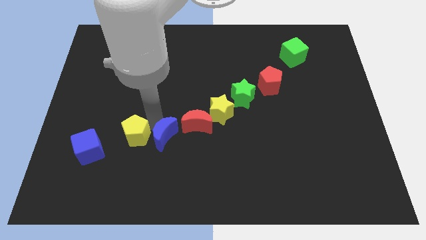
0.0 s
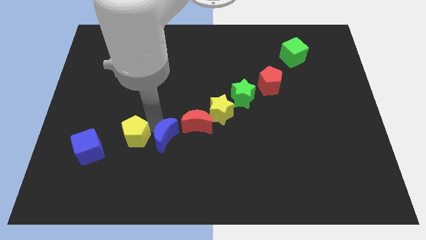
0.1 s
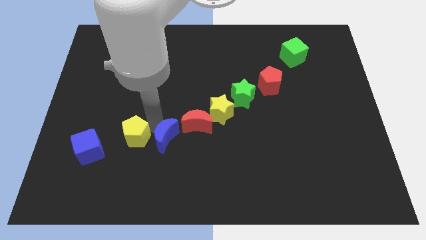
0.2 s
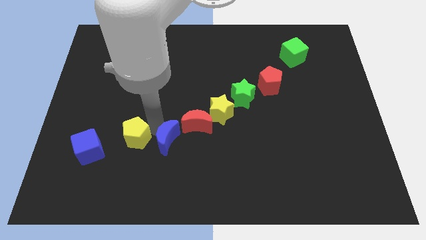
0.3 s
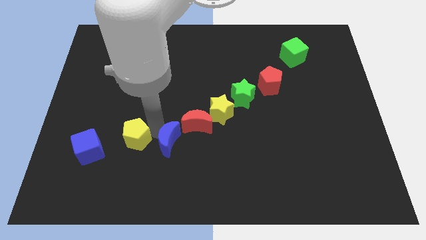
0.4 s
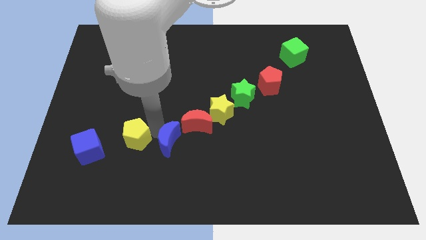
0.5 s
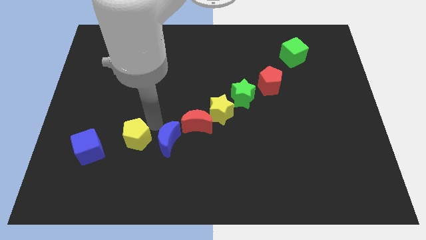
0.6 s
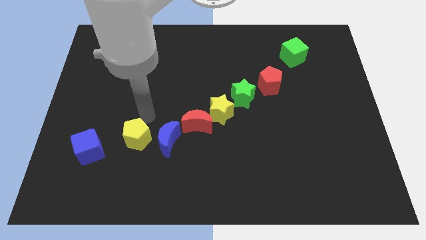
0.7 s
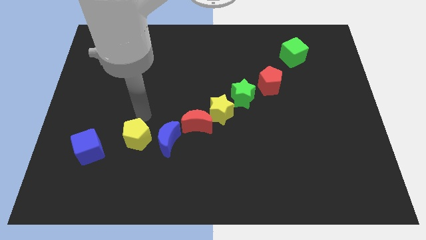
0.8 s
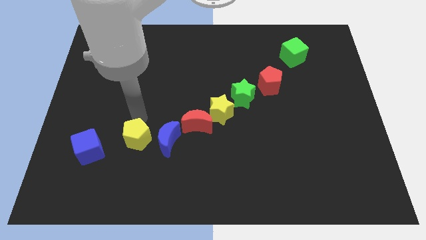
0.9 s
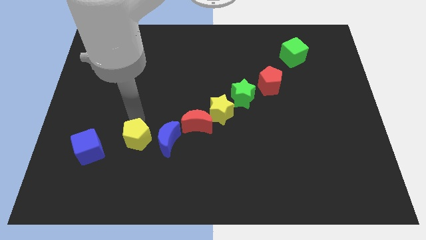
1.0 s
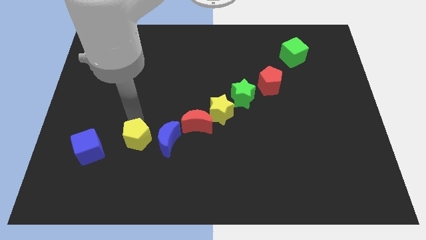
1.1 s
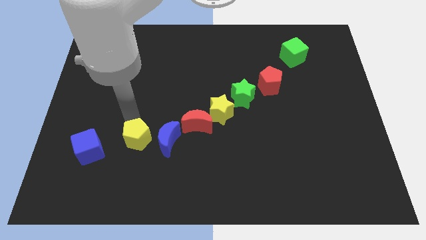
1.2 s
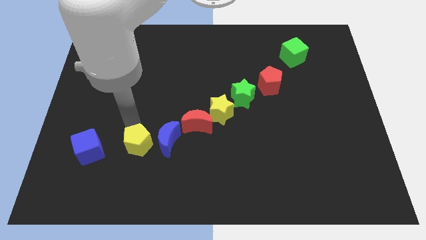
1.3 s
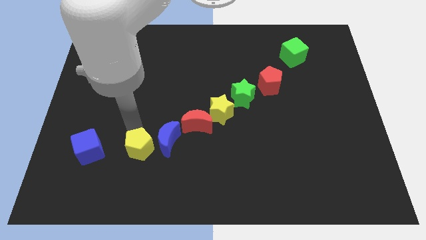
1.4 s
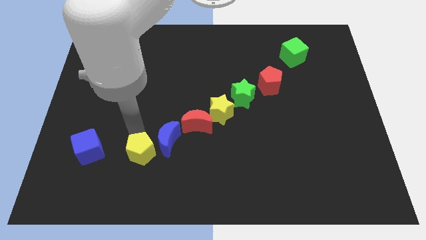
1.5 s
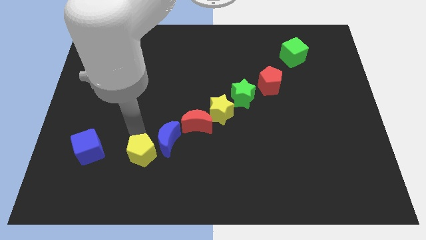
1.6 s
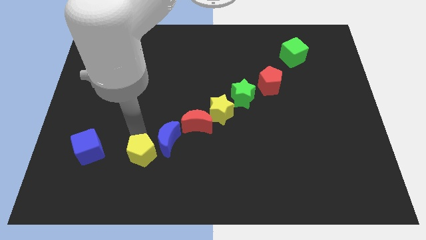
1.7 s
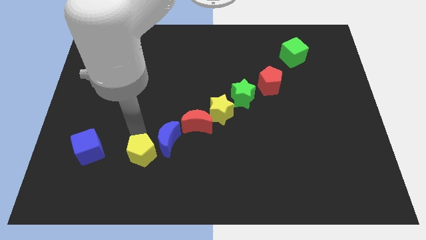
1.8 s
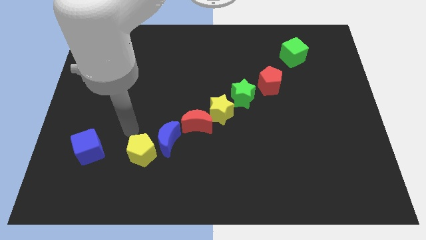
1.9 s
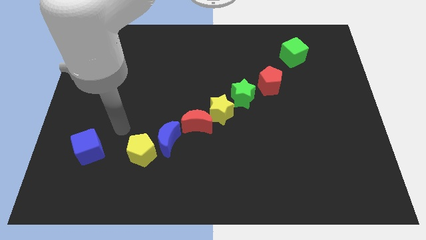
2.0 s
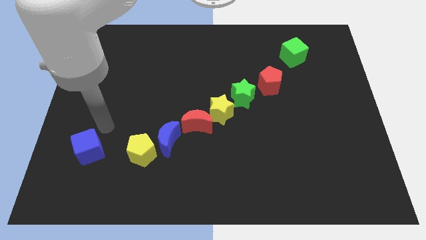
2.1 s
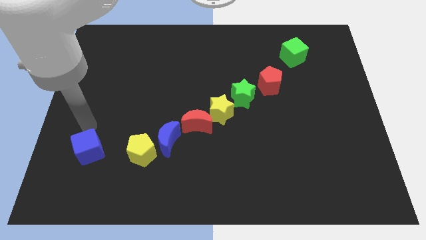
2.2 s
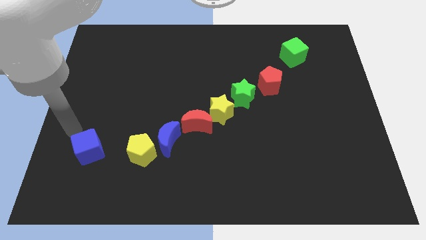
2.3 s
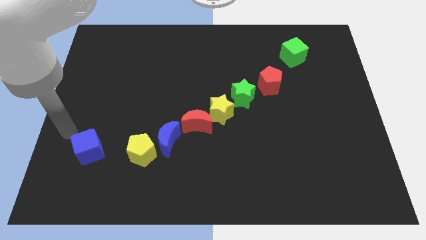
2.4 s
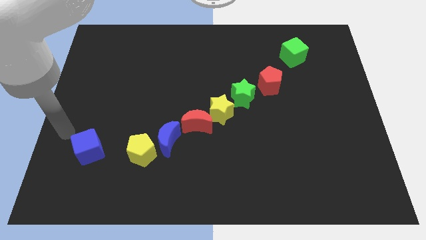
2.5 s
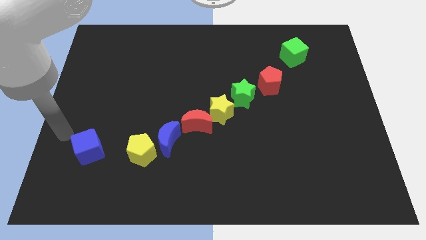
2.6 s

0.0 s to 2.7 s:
move the yellow pentagon slightly to the down

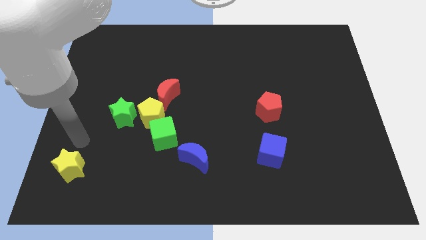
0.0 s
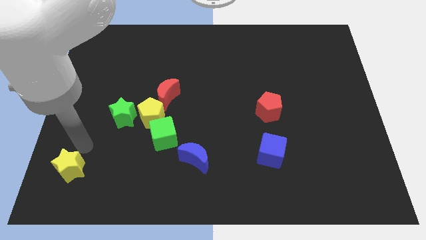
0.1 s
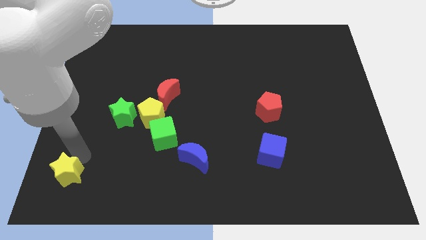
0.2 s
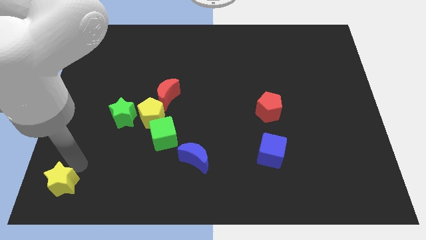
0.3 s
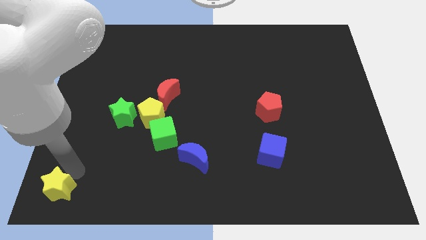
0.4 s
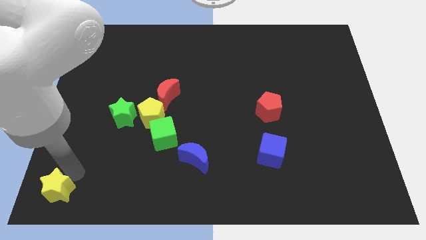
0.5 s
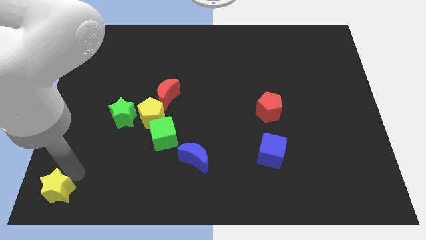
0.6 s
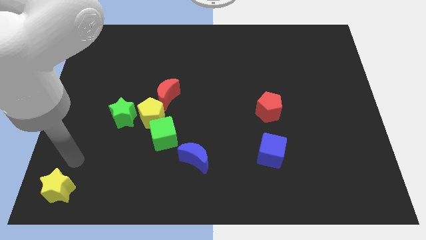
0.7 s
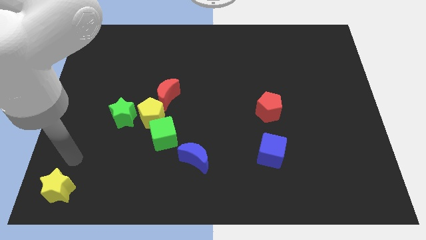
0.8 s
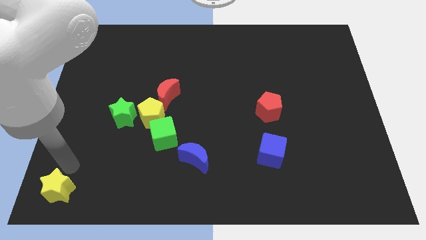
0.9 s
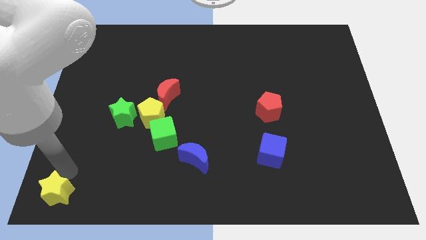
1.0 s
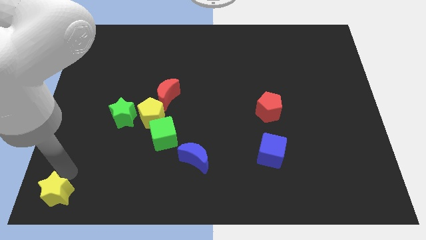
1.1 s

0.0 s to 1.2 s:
move the yellow star to the left bottom

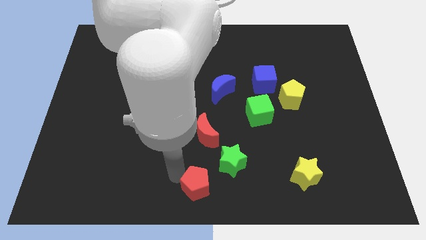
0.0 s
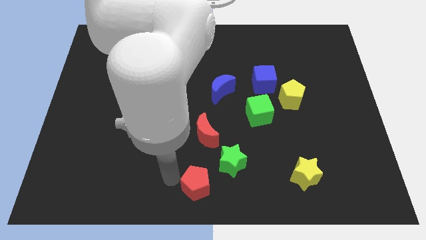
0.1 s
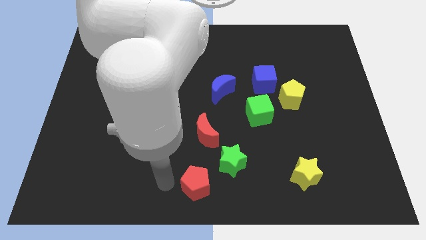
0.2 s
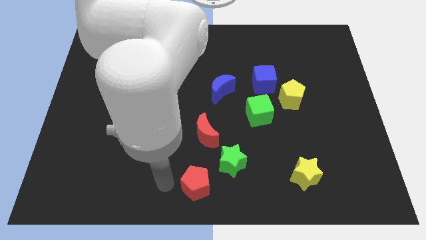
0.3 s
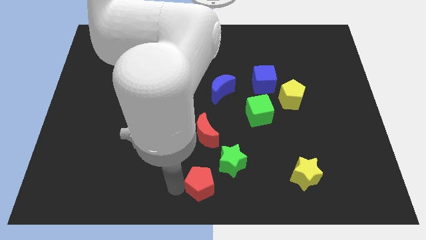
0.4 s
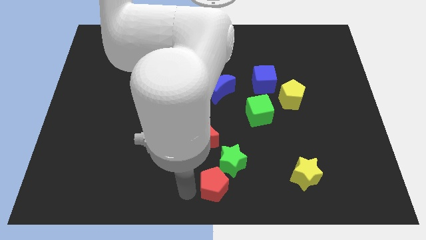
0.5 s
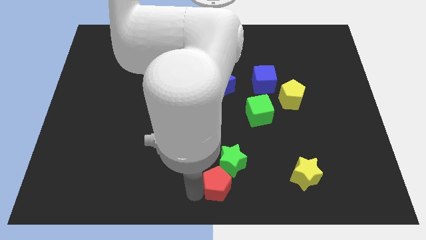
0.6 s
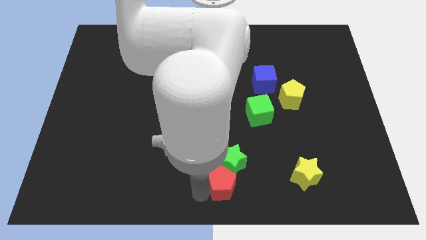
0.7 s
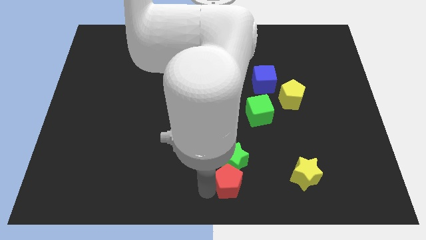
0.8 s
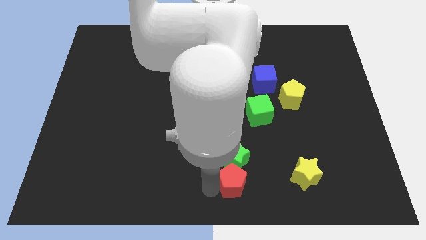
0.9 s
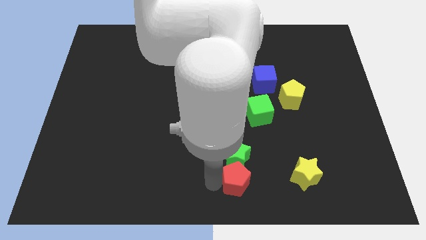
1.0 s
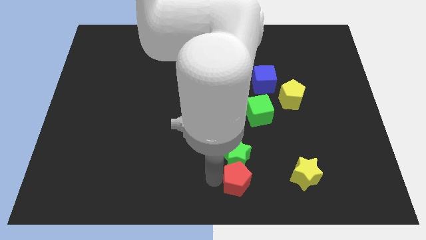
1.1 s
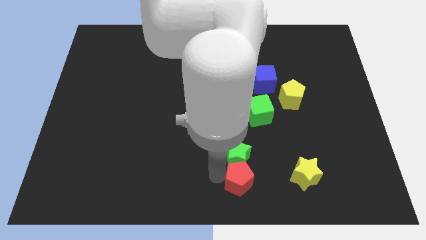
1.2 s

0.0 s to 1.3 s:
push the red pentagon into the green star

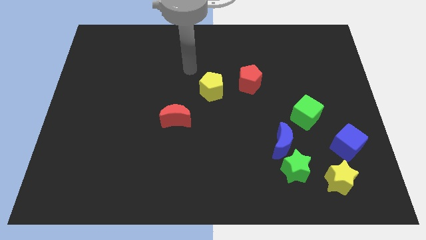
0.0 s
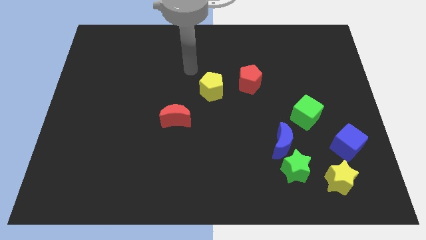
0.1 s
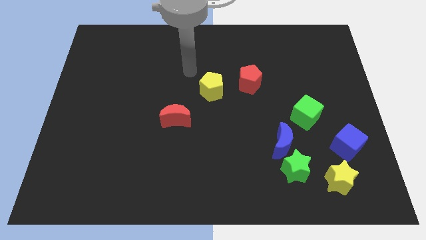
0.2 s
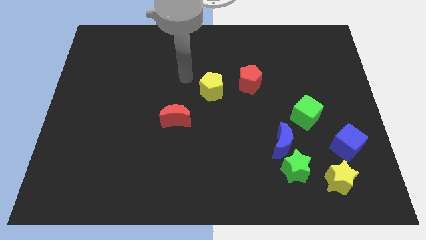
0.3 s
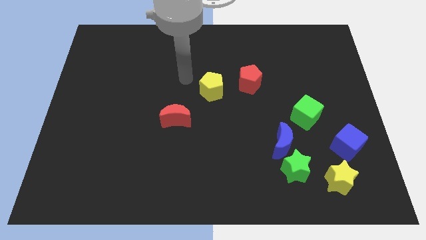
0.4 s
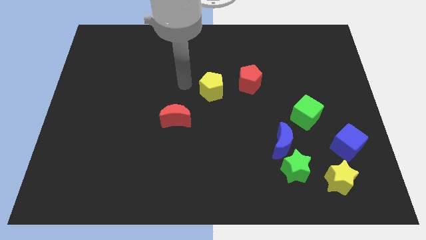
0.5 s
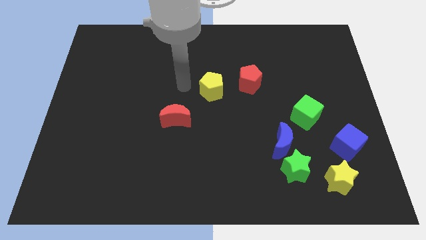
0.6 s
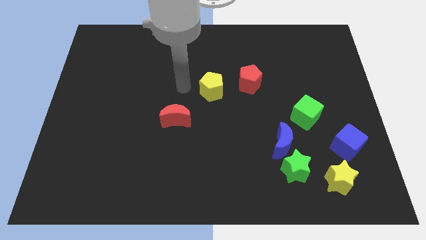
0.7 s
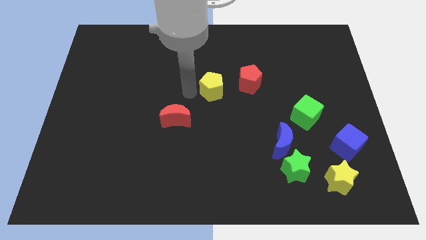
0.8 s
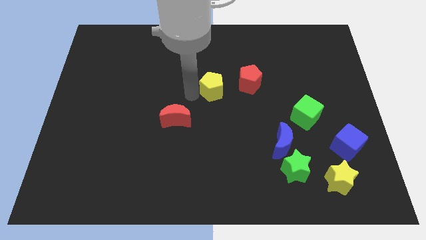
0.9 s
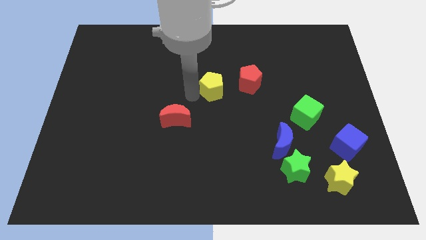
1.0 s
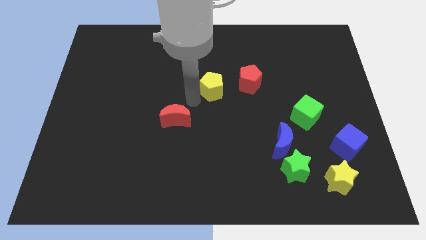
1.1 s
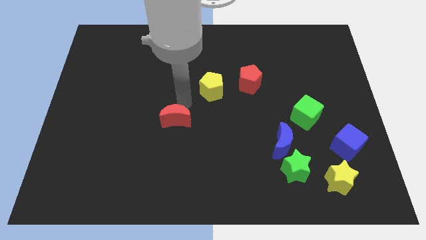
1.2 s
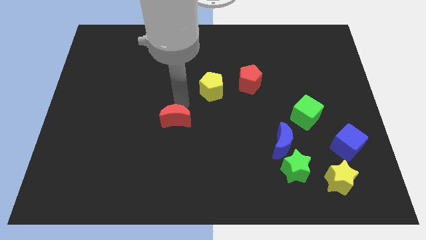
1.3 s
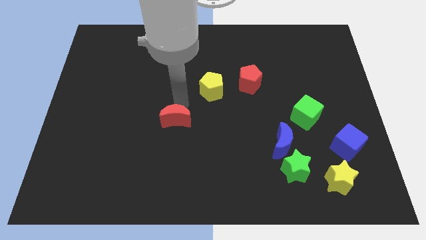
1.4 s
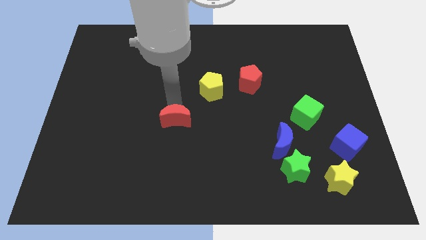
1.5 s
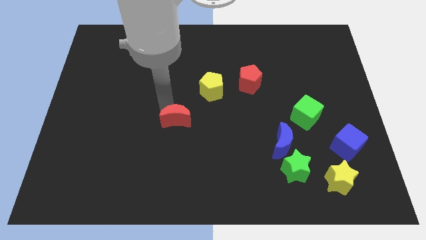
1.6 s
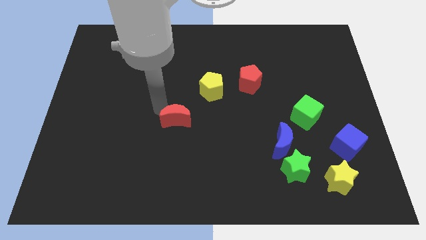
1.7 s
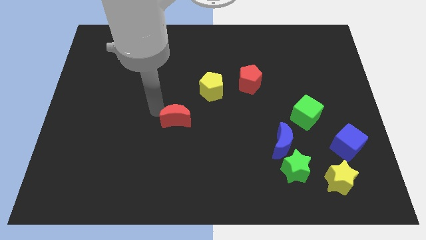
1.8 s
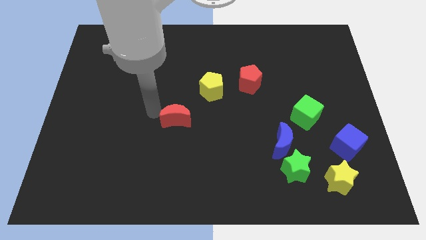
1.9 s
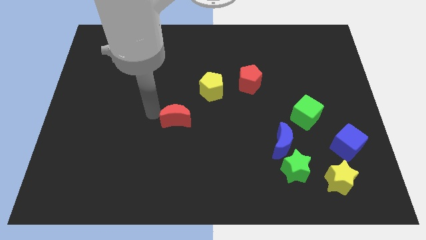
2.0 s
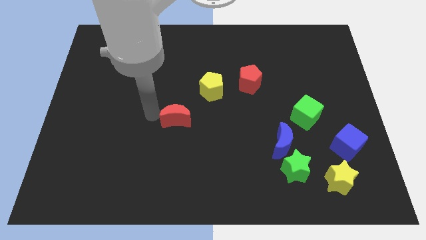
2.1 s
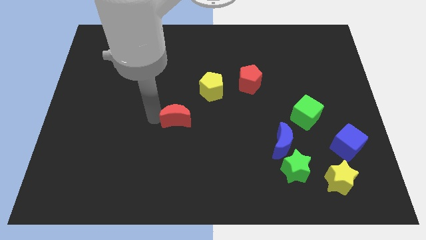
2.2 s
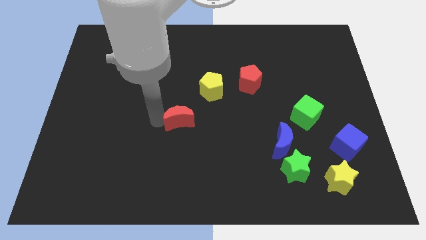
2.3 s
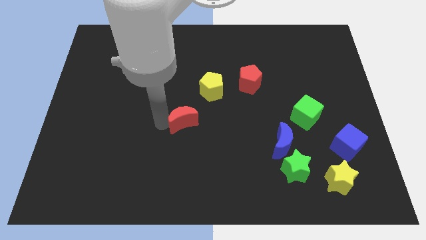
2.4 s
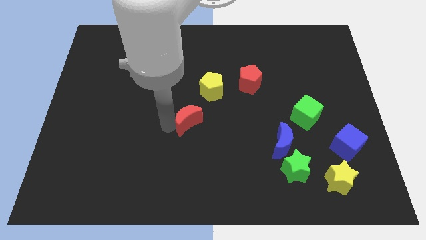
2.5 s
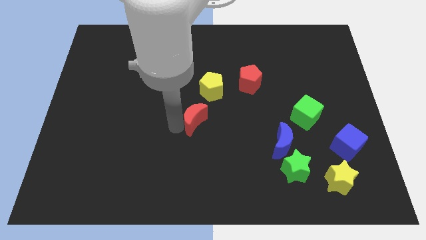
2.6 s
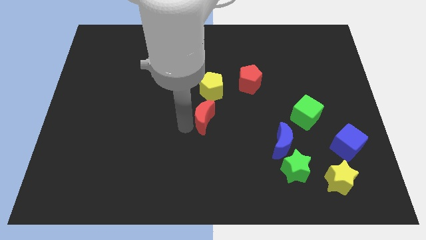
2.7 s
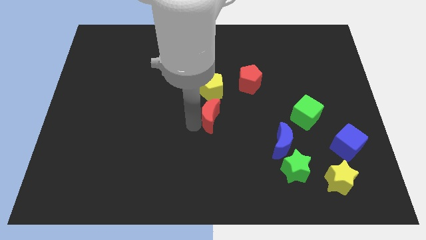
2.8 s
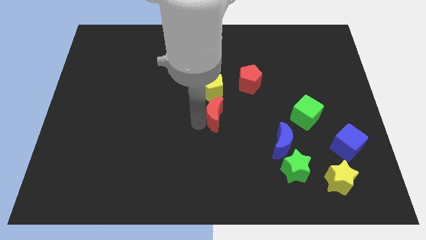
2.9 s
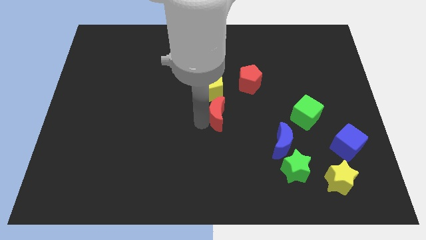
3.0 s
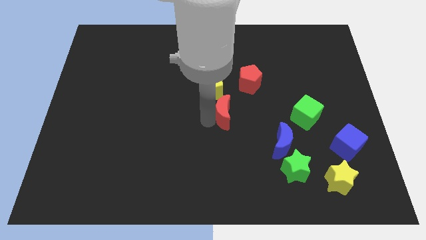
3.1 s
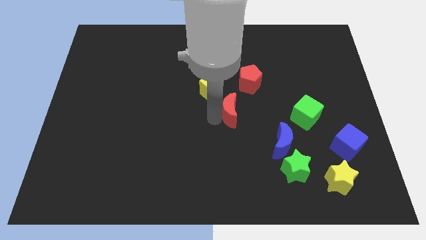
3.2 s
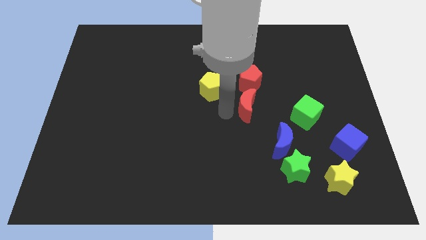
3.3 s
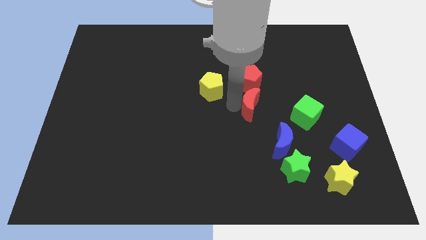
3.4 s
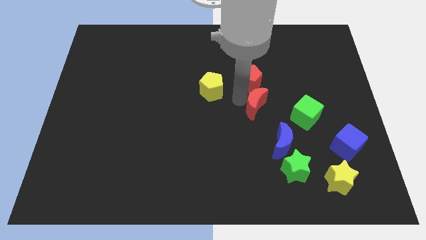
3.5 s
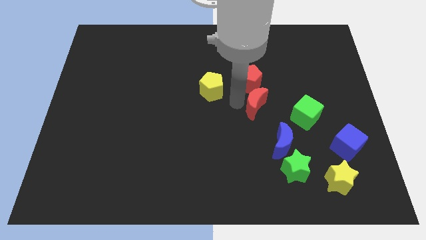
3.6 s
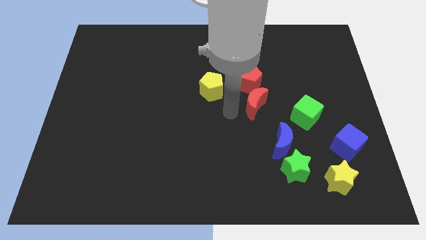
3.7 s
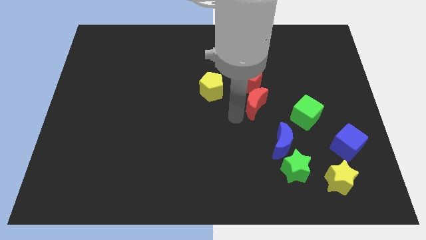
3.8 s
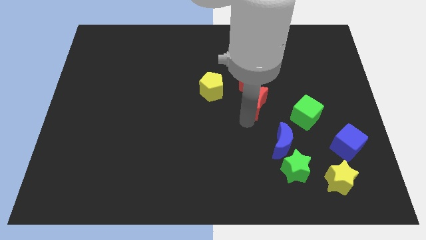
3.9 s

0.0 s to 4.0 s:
drag red moon below red pentagon
